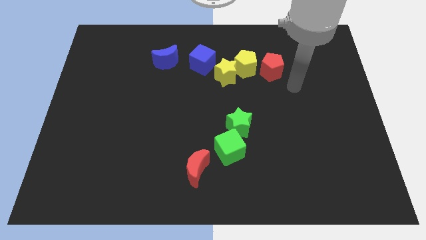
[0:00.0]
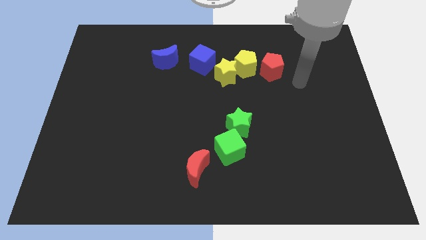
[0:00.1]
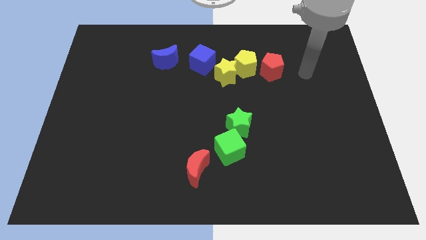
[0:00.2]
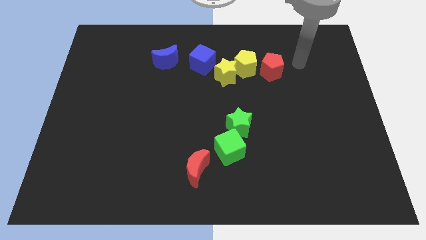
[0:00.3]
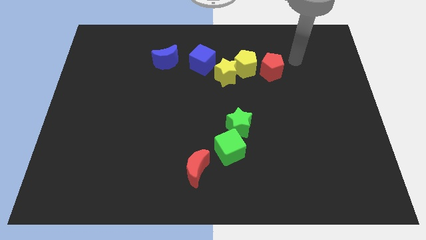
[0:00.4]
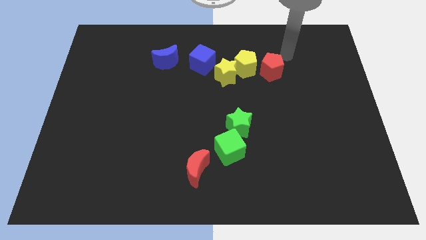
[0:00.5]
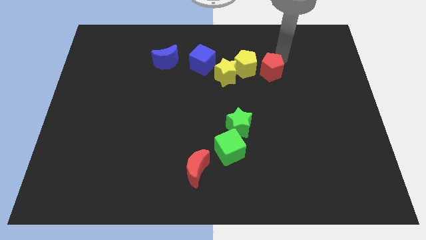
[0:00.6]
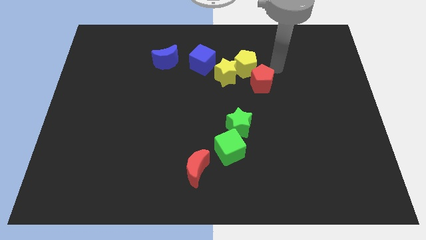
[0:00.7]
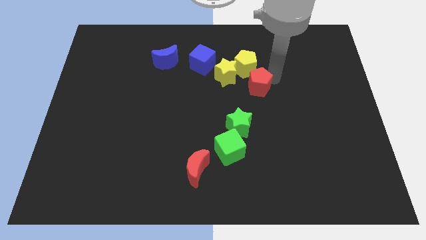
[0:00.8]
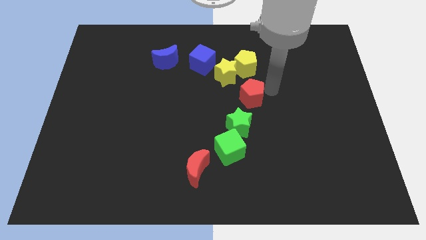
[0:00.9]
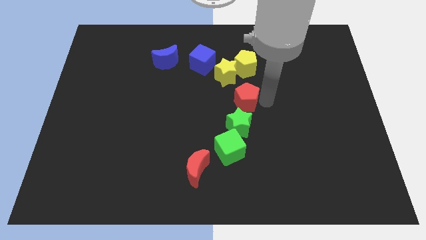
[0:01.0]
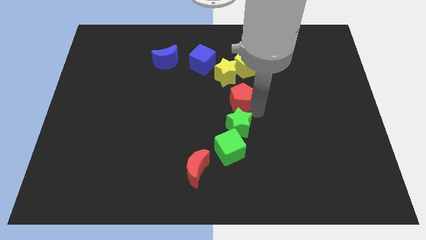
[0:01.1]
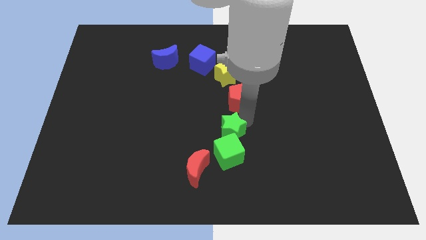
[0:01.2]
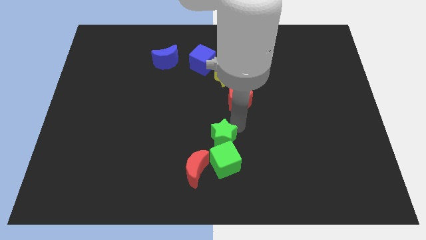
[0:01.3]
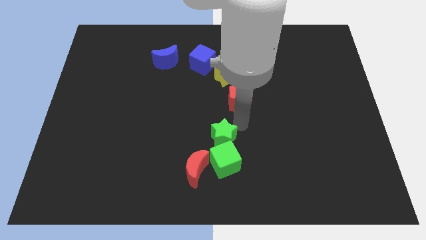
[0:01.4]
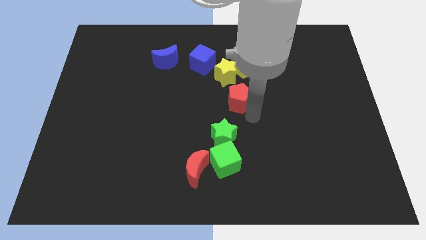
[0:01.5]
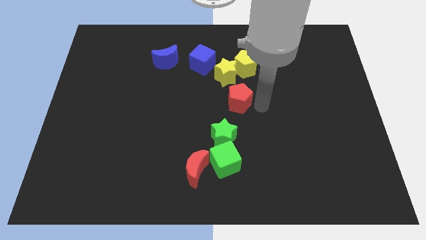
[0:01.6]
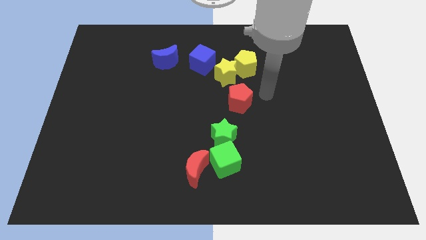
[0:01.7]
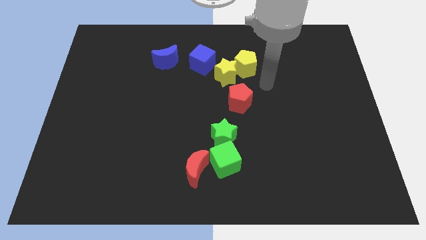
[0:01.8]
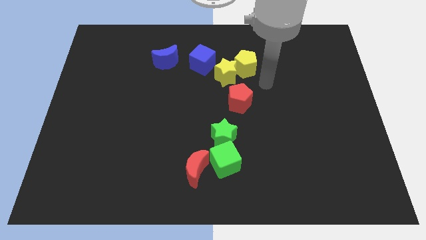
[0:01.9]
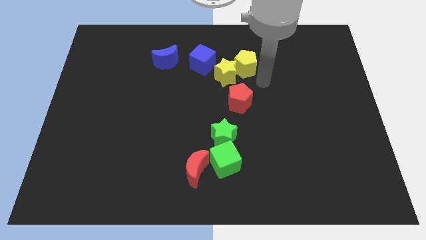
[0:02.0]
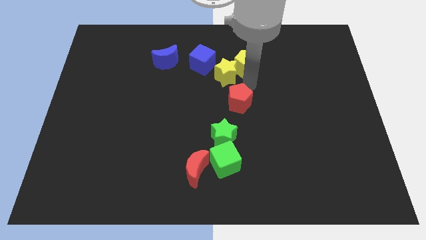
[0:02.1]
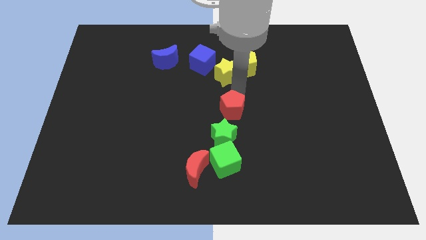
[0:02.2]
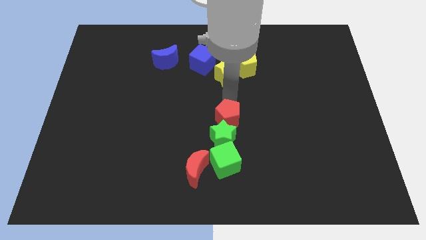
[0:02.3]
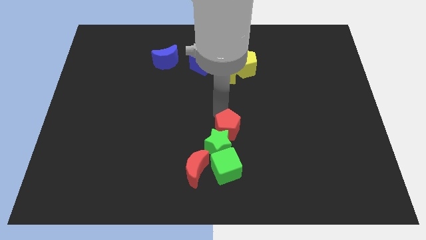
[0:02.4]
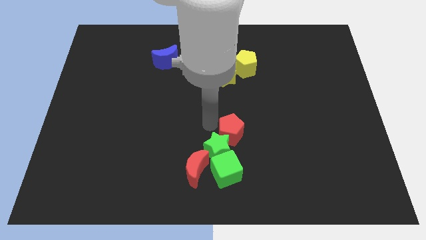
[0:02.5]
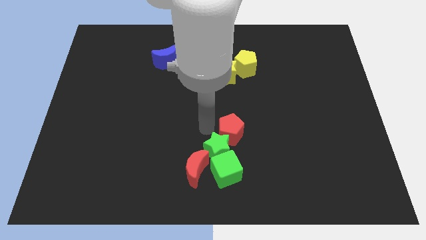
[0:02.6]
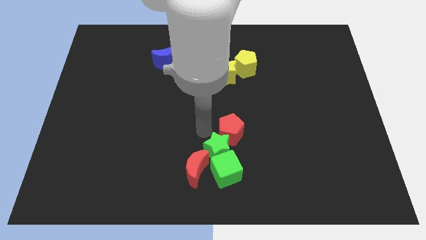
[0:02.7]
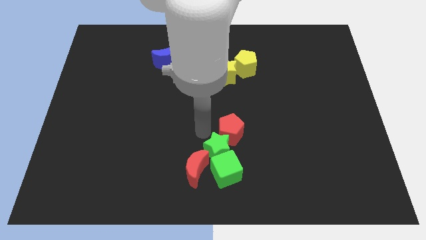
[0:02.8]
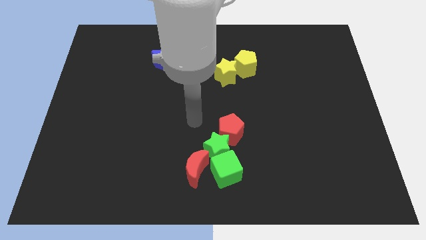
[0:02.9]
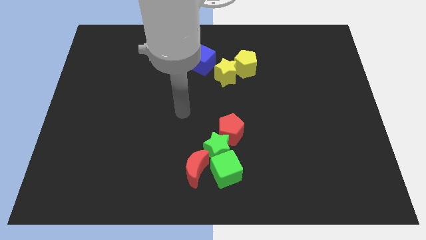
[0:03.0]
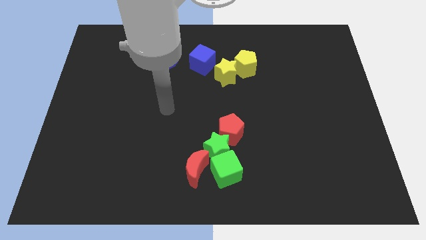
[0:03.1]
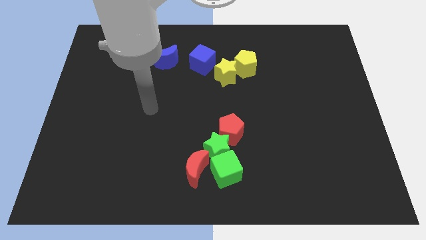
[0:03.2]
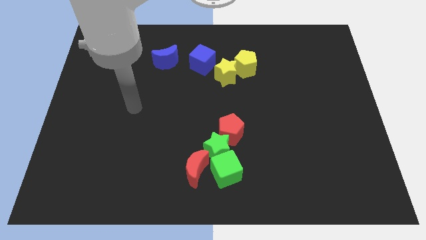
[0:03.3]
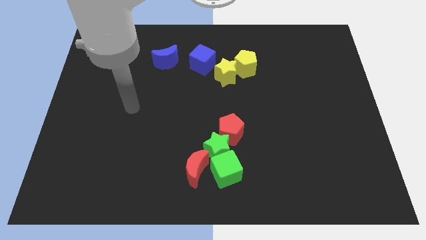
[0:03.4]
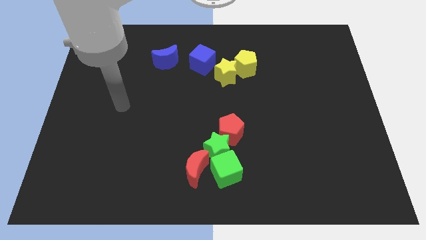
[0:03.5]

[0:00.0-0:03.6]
push the red pentagon into the bottom group of blocks

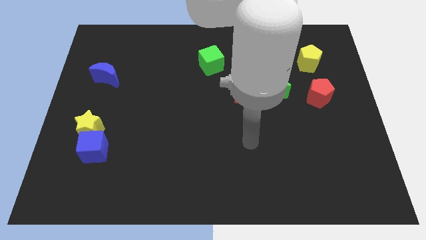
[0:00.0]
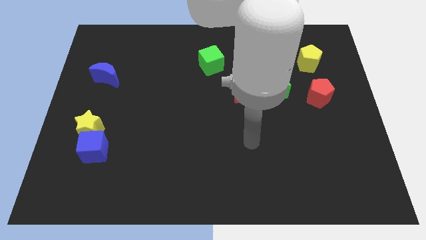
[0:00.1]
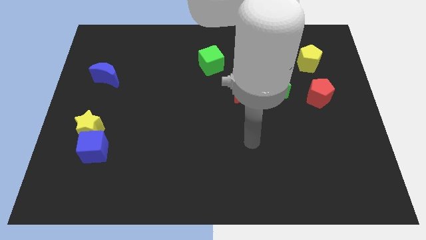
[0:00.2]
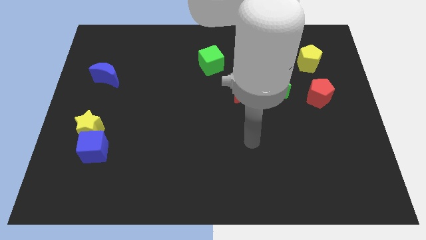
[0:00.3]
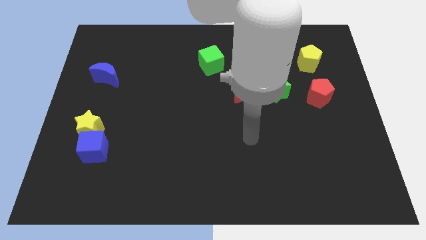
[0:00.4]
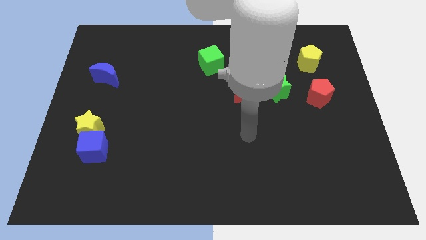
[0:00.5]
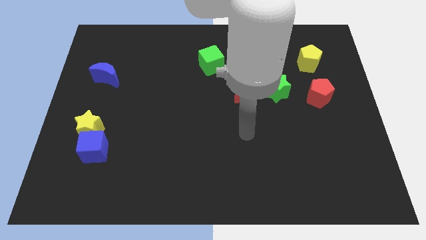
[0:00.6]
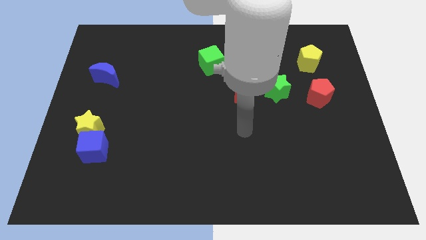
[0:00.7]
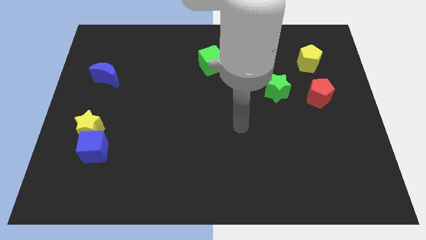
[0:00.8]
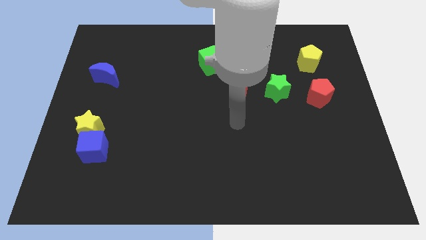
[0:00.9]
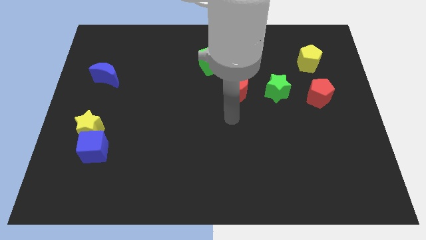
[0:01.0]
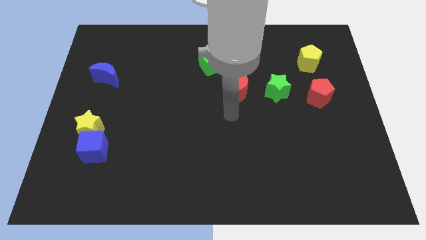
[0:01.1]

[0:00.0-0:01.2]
move your arm toward the red crescent

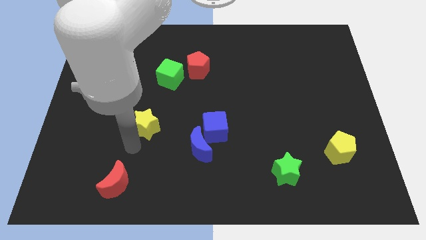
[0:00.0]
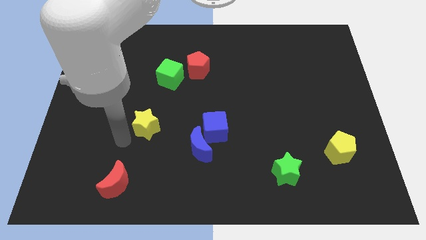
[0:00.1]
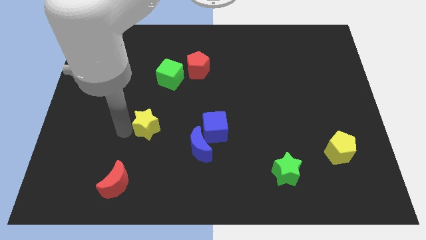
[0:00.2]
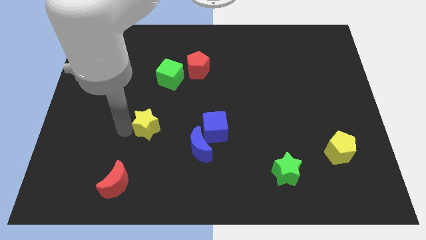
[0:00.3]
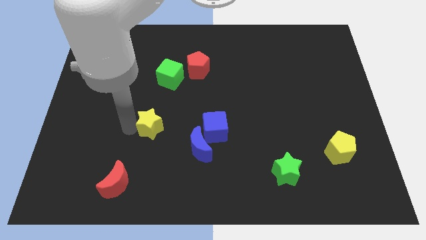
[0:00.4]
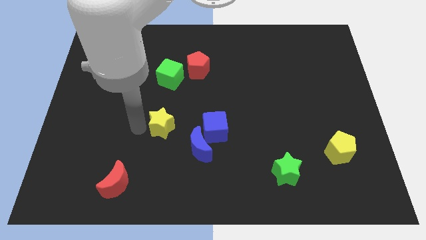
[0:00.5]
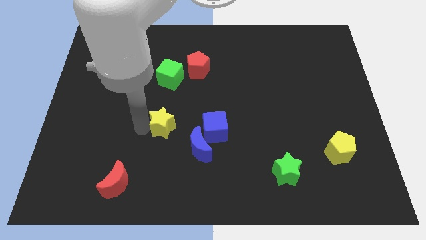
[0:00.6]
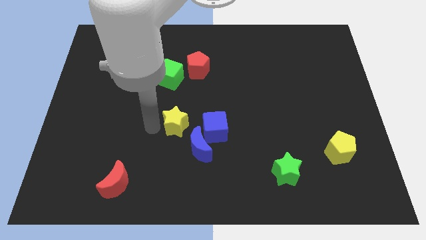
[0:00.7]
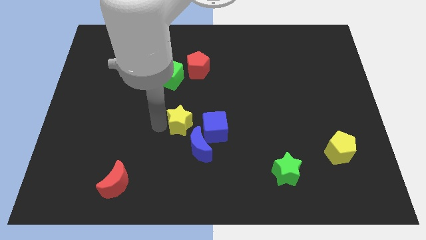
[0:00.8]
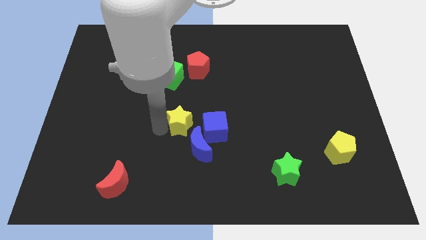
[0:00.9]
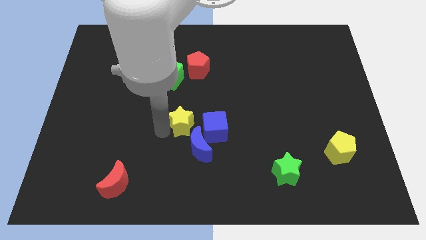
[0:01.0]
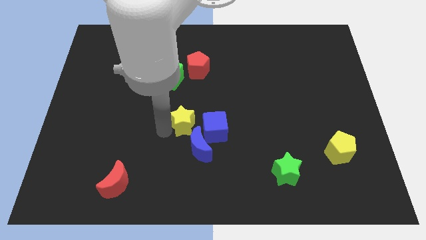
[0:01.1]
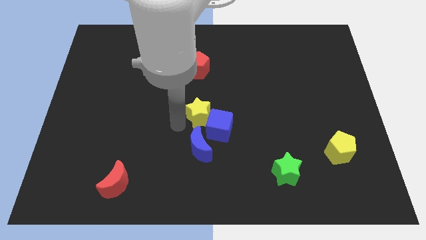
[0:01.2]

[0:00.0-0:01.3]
push the yellow star into the blue cube

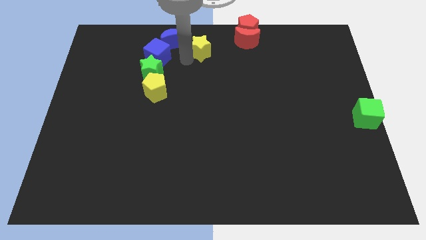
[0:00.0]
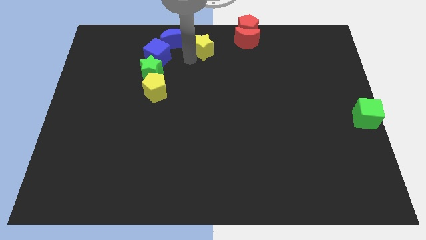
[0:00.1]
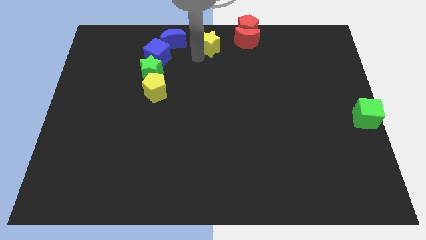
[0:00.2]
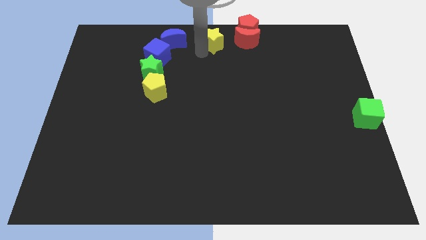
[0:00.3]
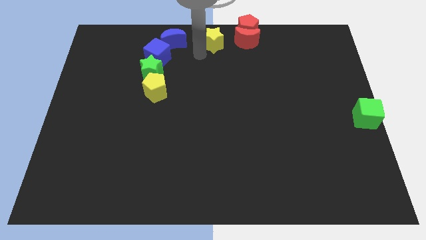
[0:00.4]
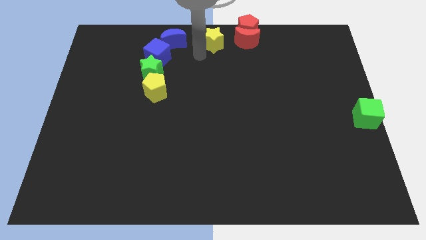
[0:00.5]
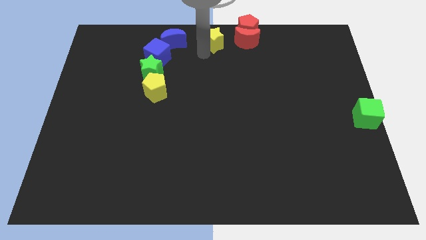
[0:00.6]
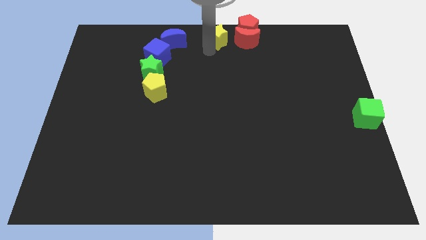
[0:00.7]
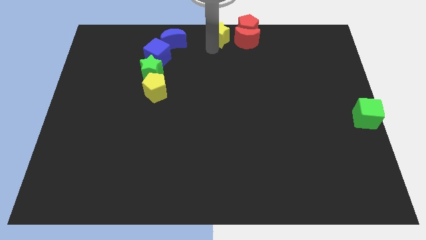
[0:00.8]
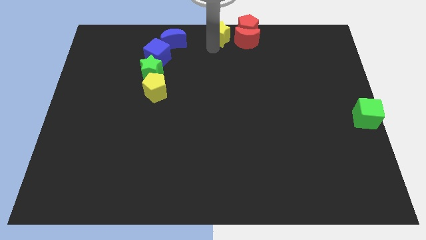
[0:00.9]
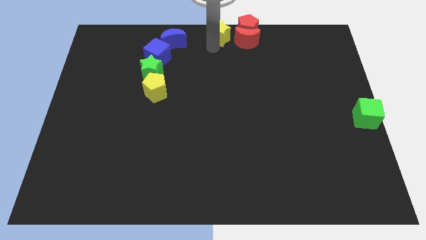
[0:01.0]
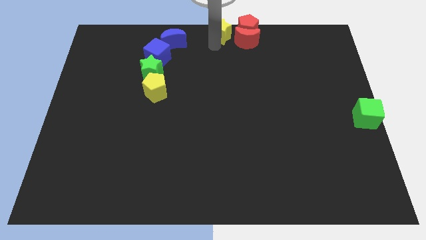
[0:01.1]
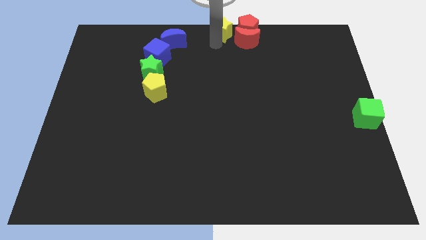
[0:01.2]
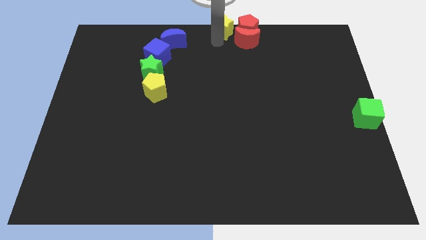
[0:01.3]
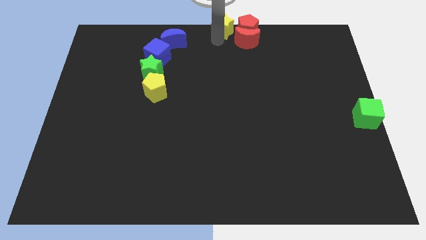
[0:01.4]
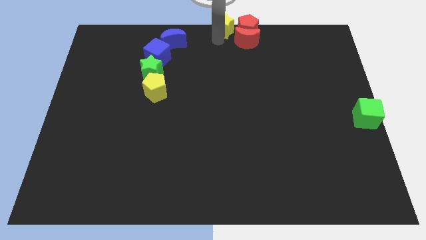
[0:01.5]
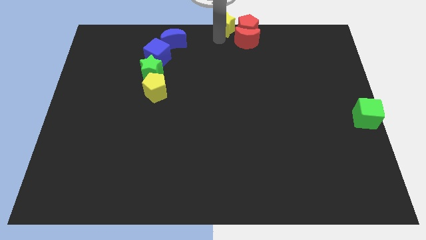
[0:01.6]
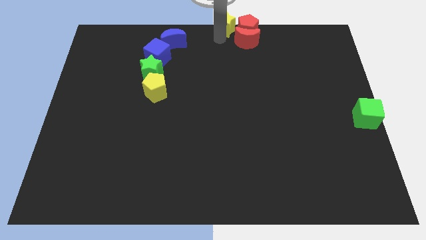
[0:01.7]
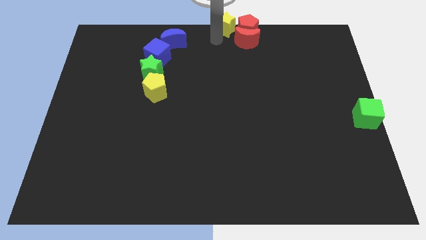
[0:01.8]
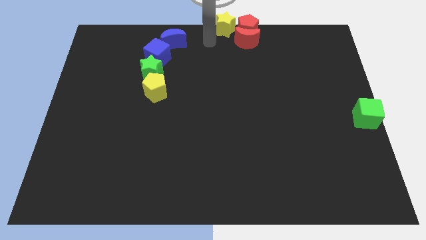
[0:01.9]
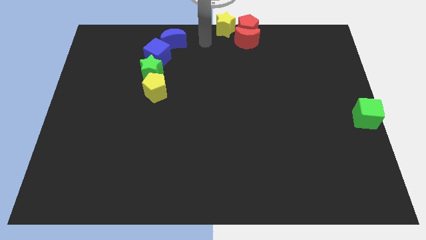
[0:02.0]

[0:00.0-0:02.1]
place the yellow star to the left of the red pentagon

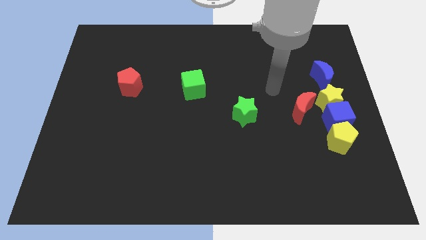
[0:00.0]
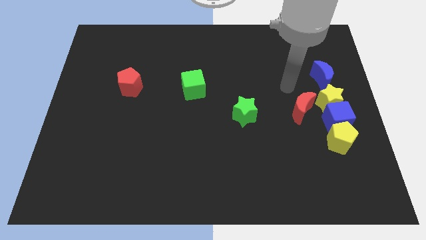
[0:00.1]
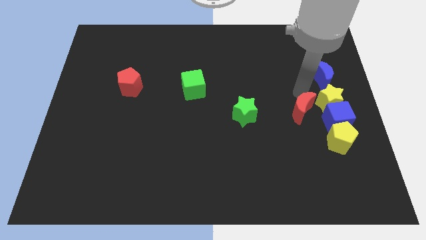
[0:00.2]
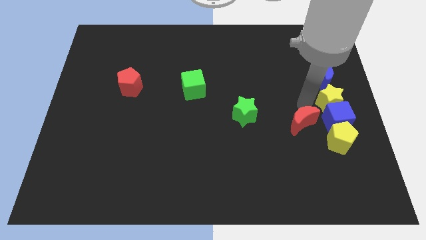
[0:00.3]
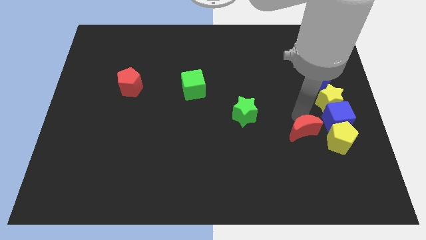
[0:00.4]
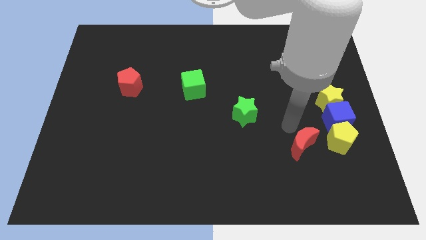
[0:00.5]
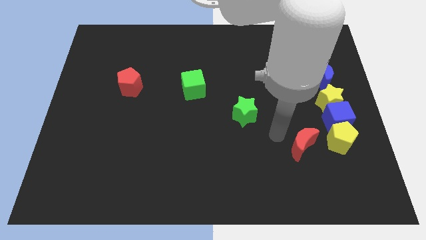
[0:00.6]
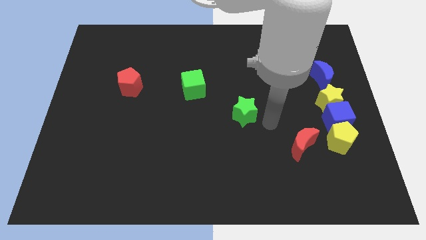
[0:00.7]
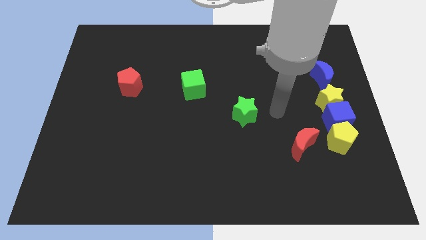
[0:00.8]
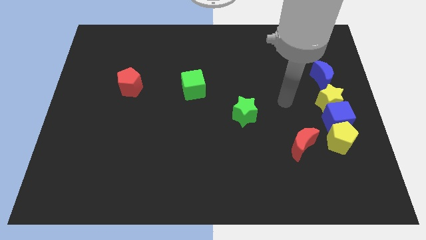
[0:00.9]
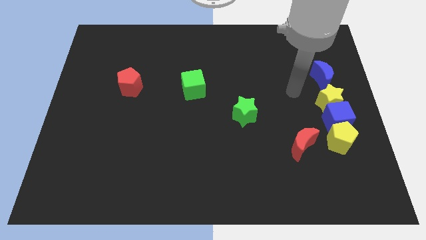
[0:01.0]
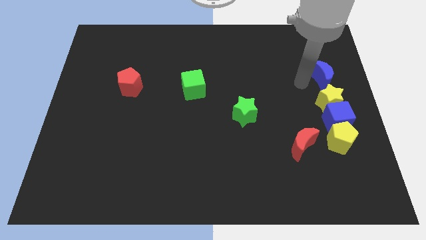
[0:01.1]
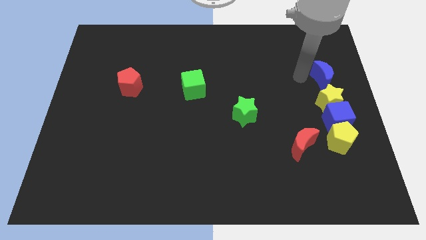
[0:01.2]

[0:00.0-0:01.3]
push the red moon to the left of yellow pentagon
